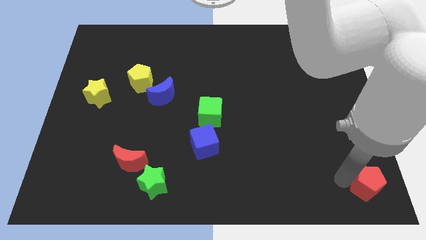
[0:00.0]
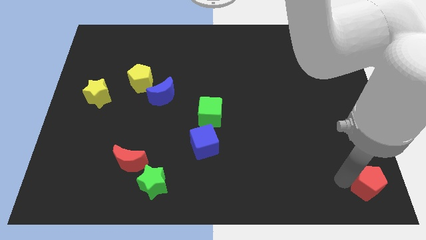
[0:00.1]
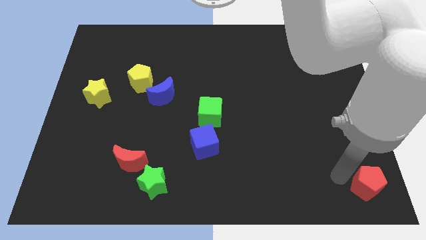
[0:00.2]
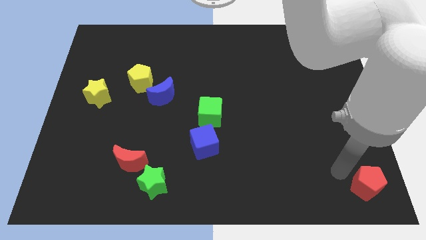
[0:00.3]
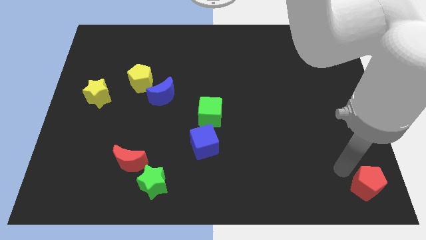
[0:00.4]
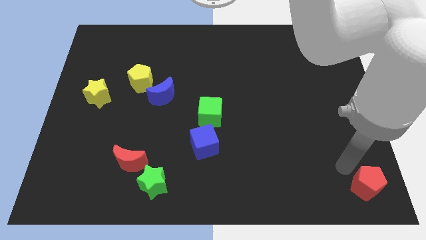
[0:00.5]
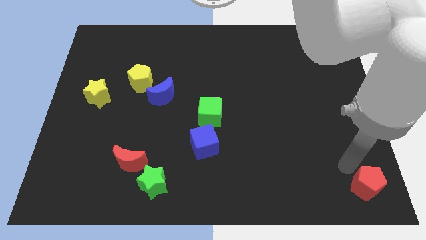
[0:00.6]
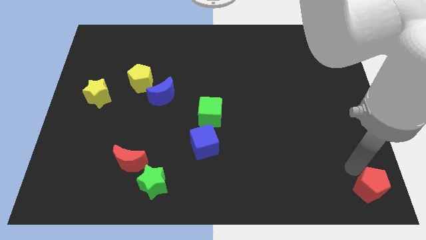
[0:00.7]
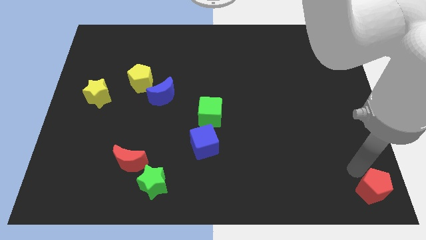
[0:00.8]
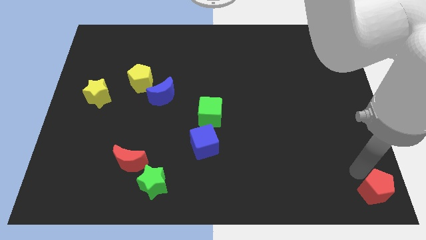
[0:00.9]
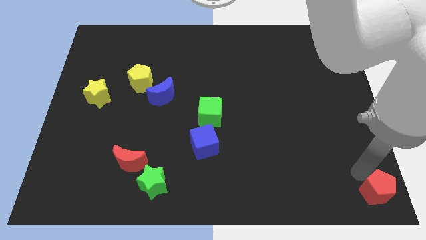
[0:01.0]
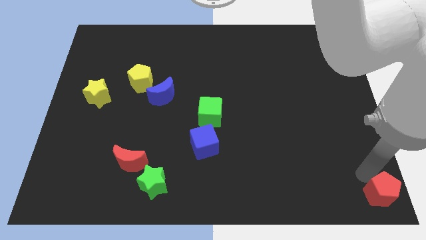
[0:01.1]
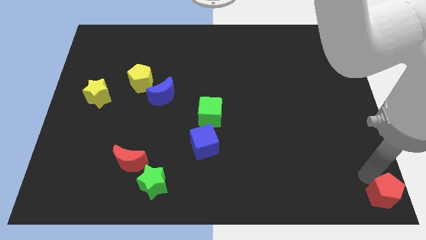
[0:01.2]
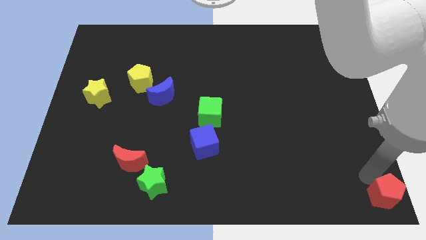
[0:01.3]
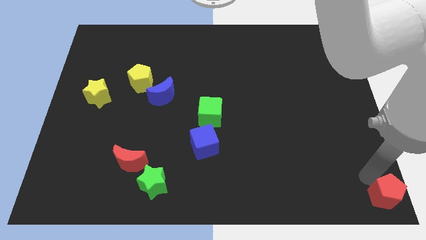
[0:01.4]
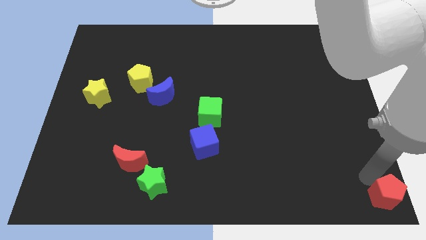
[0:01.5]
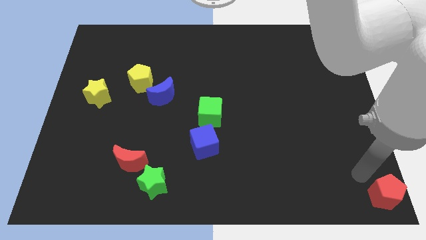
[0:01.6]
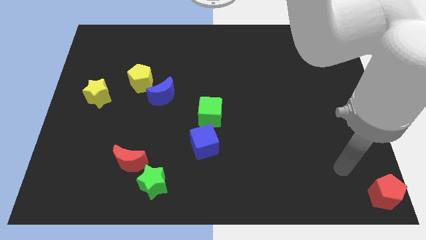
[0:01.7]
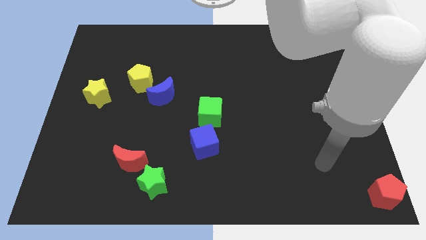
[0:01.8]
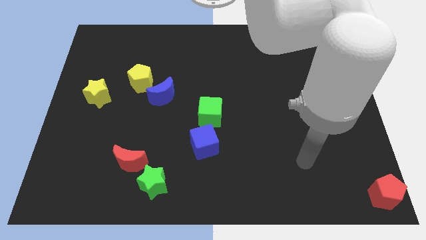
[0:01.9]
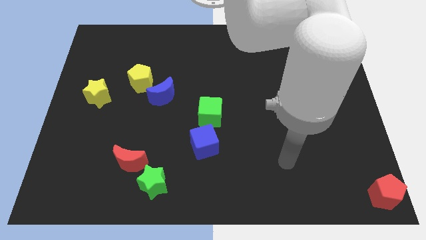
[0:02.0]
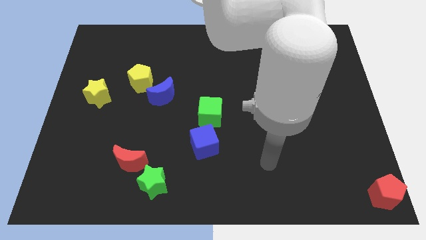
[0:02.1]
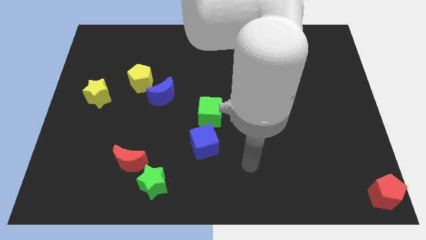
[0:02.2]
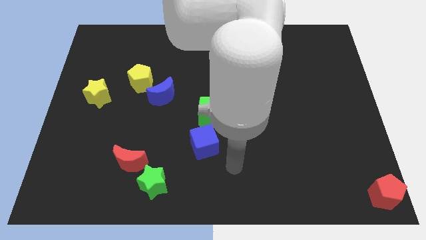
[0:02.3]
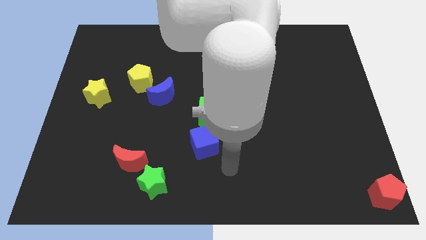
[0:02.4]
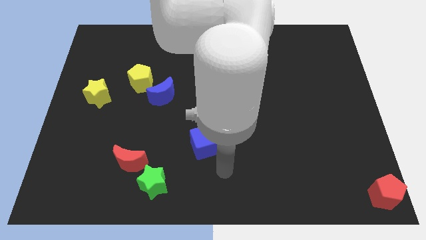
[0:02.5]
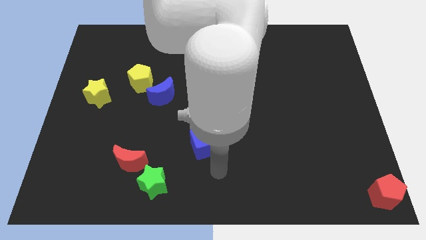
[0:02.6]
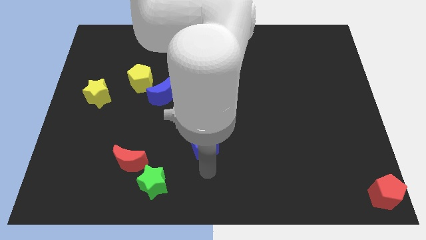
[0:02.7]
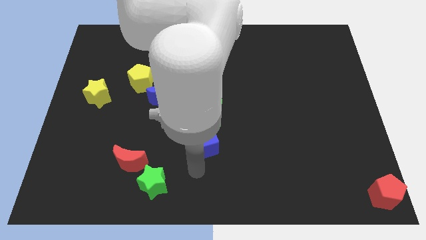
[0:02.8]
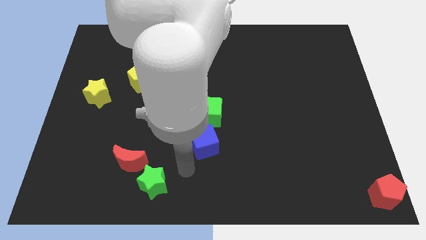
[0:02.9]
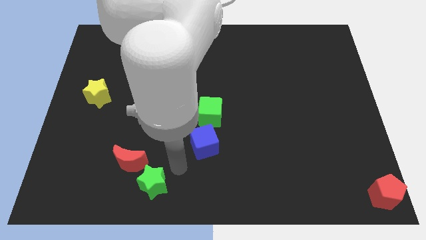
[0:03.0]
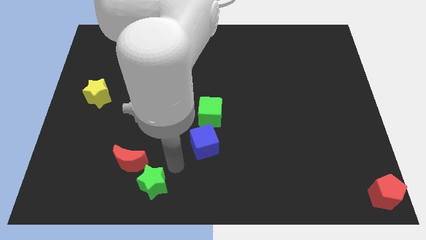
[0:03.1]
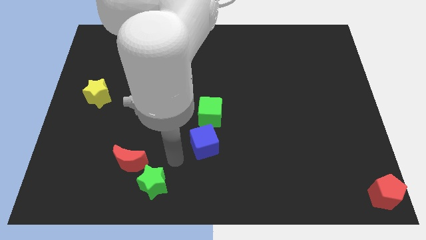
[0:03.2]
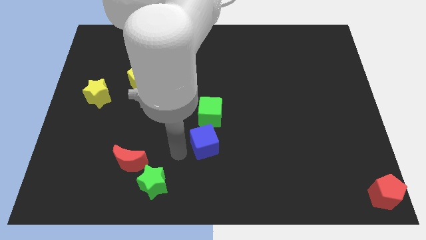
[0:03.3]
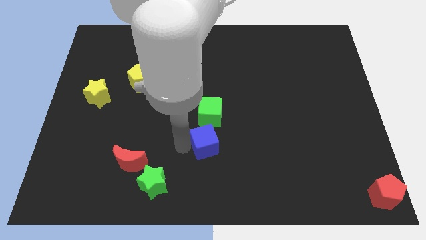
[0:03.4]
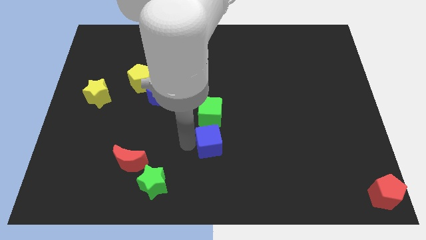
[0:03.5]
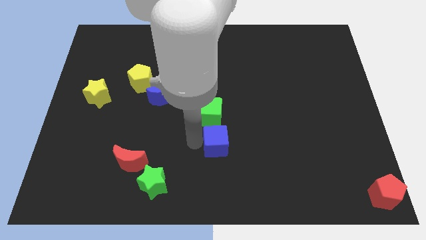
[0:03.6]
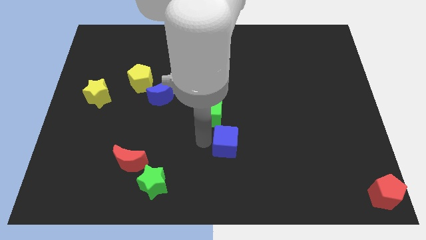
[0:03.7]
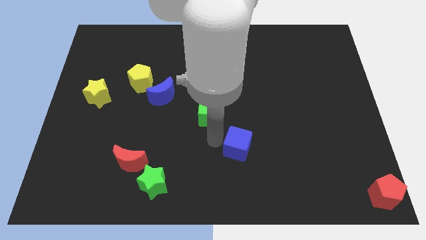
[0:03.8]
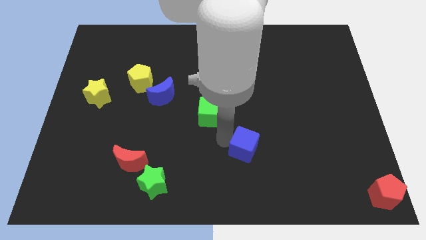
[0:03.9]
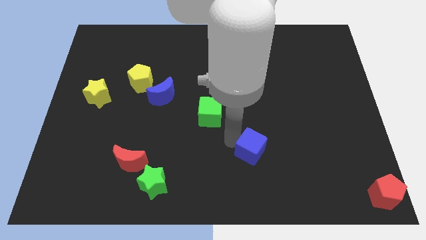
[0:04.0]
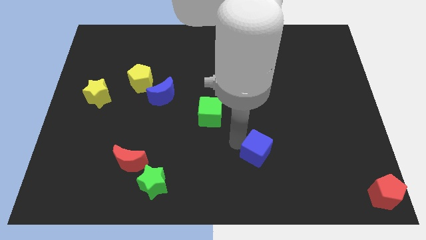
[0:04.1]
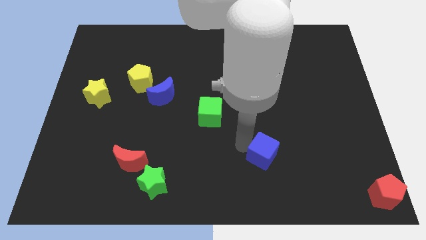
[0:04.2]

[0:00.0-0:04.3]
move the blue cube away from the bottom side of the green cube

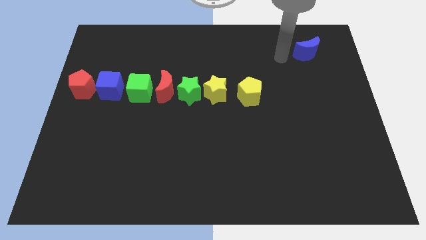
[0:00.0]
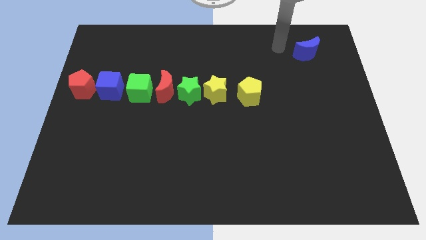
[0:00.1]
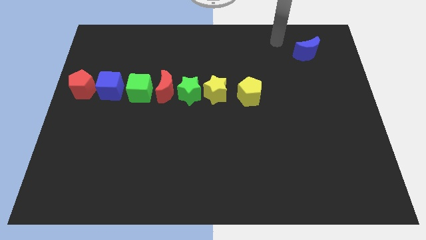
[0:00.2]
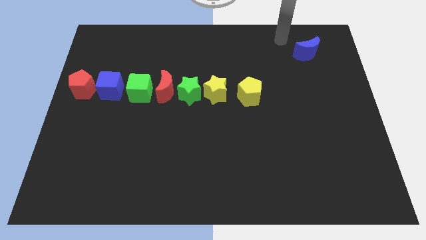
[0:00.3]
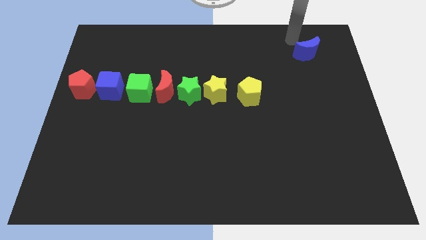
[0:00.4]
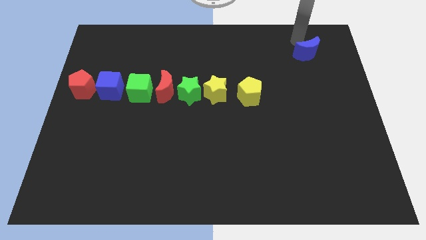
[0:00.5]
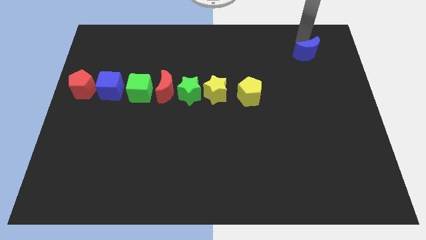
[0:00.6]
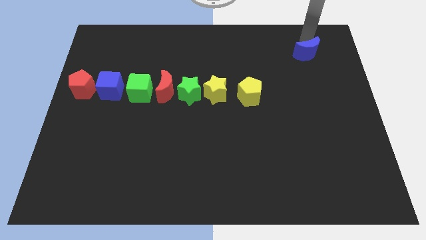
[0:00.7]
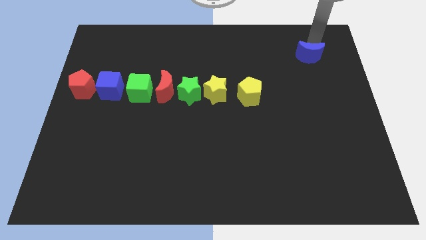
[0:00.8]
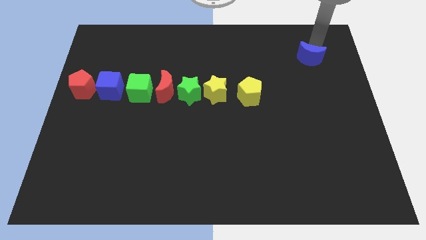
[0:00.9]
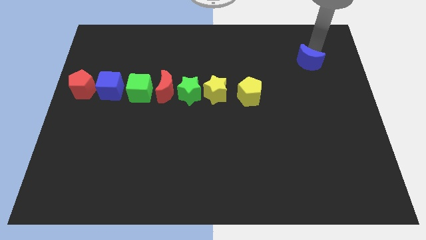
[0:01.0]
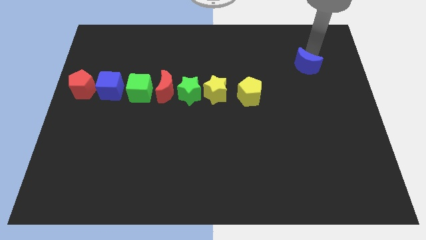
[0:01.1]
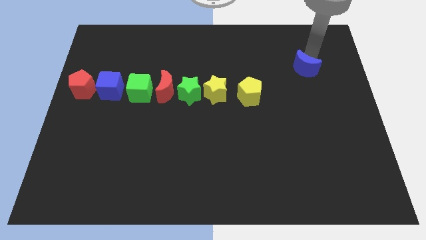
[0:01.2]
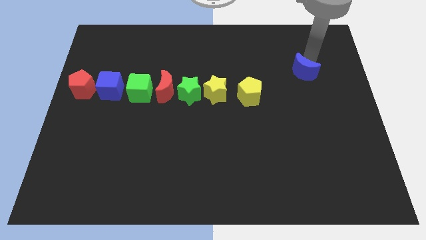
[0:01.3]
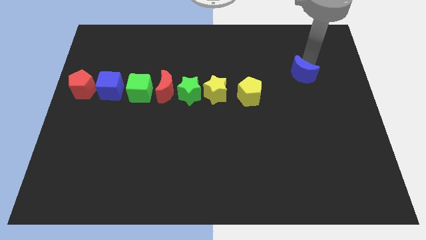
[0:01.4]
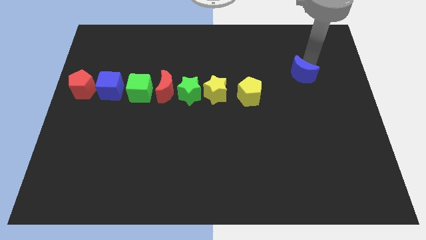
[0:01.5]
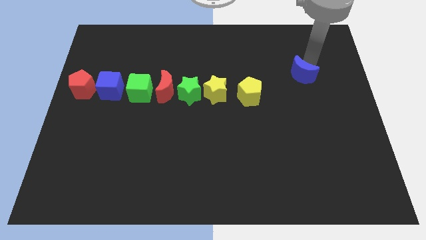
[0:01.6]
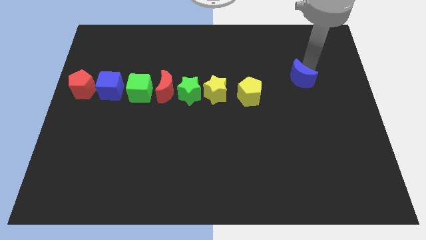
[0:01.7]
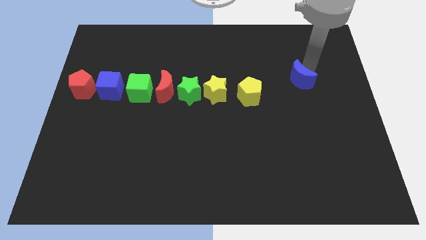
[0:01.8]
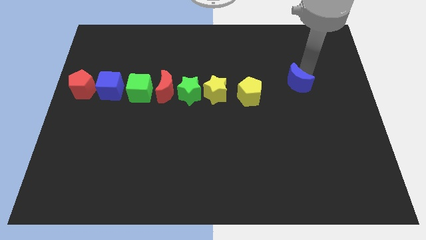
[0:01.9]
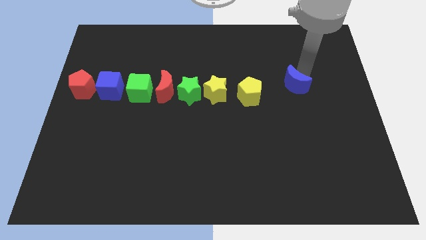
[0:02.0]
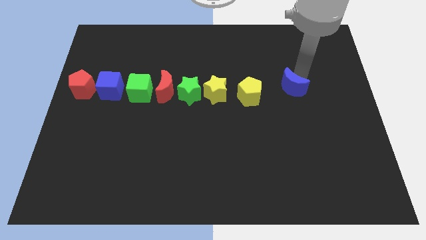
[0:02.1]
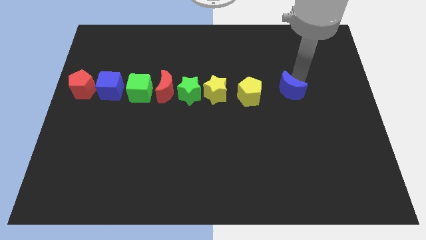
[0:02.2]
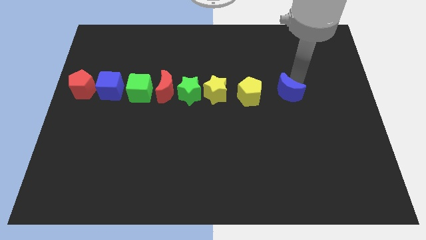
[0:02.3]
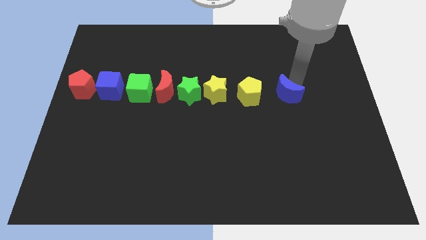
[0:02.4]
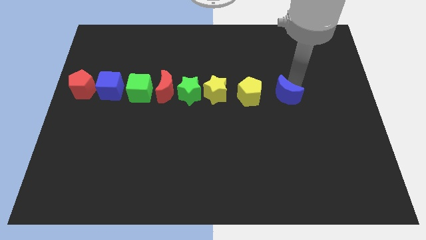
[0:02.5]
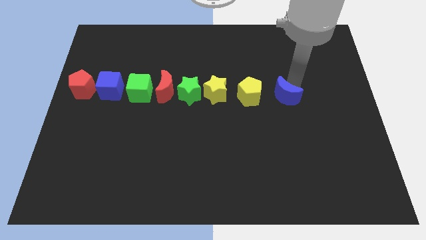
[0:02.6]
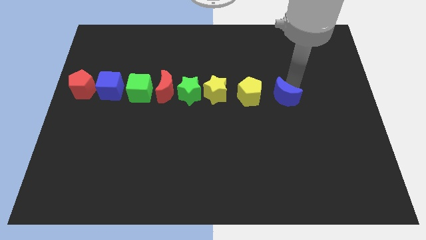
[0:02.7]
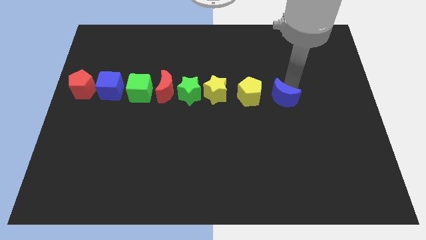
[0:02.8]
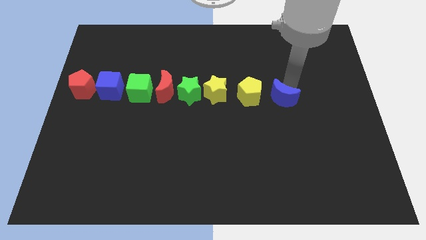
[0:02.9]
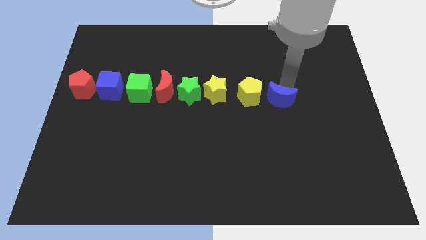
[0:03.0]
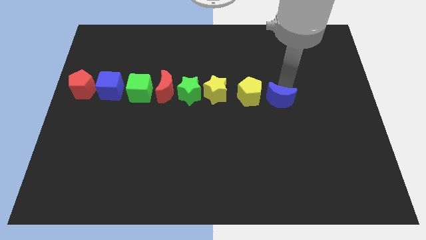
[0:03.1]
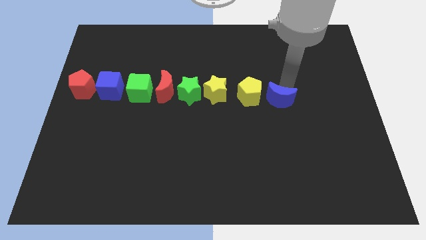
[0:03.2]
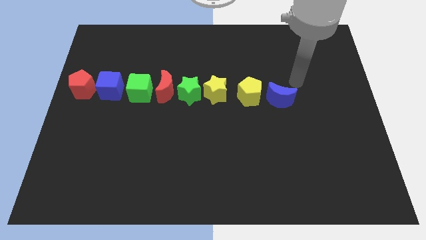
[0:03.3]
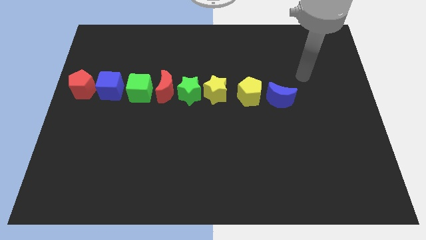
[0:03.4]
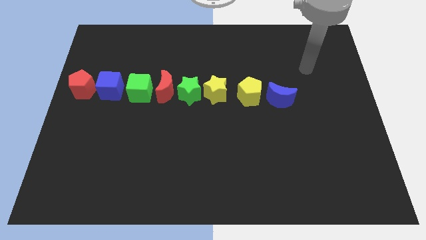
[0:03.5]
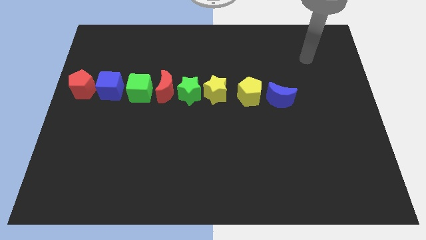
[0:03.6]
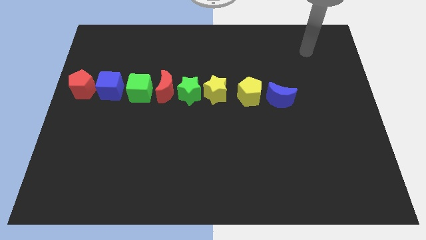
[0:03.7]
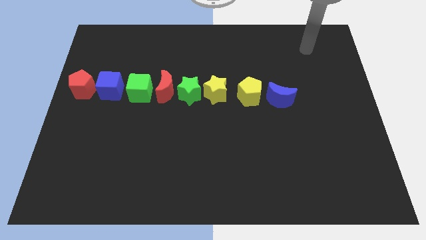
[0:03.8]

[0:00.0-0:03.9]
place the blue moon to the right of the yellow pentagon

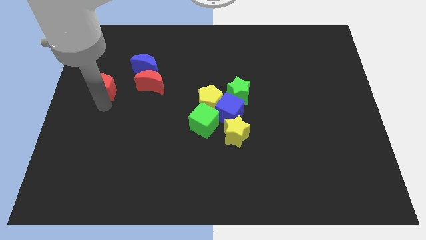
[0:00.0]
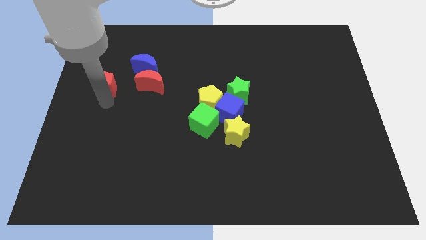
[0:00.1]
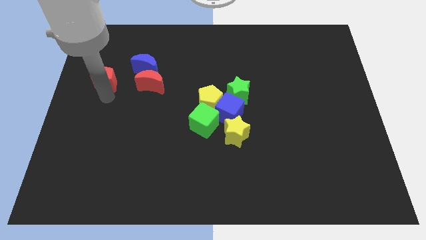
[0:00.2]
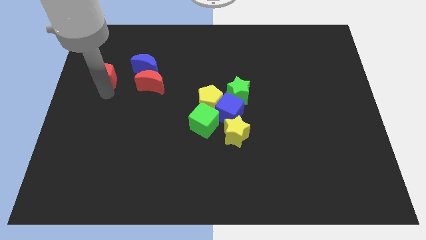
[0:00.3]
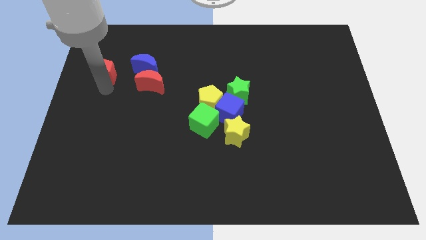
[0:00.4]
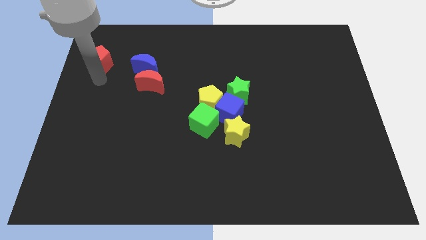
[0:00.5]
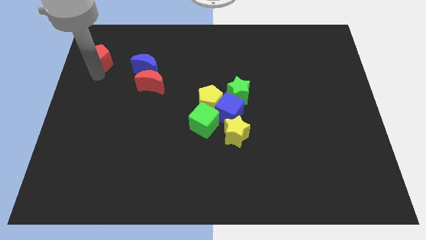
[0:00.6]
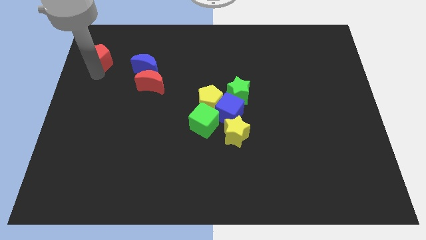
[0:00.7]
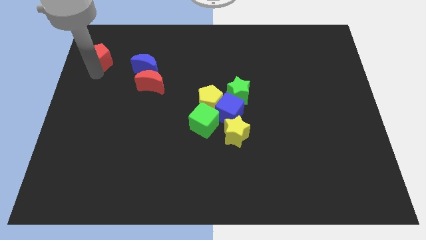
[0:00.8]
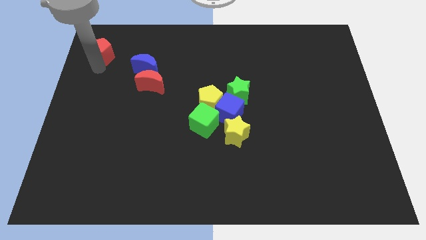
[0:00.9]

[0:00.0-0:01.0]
move red pentagon to the left of blue moon
